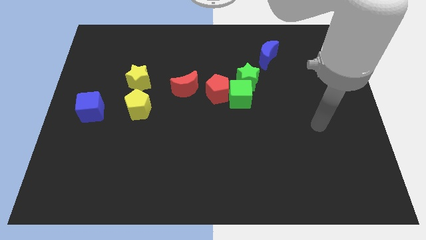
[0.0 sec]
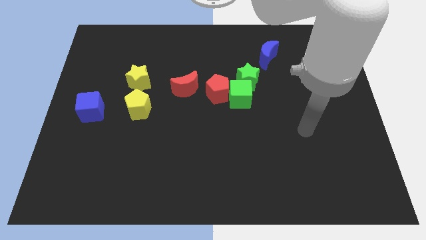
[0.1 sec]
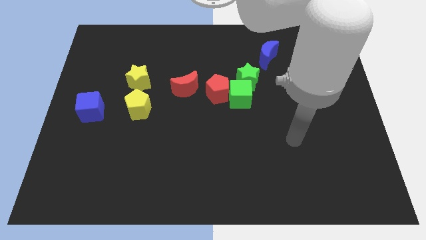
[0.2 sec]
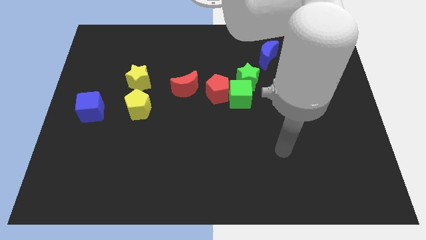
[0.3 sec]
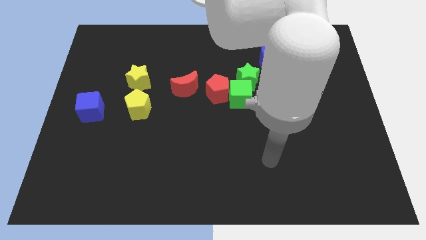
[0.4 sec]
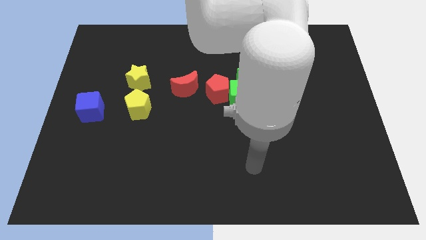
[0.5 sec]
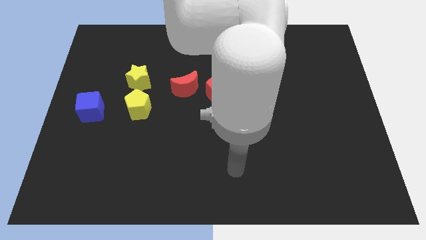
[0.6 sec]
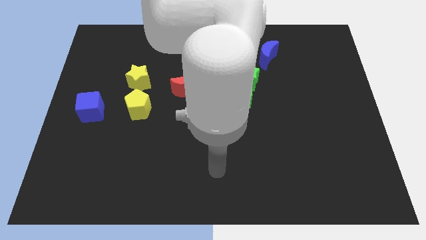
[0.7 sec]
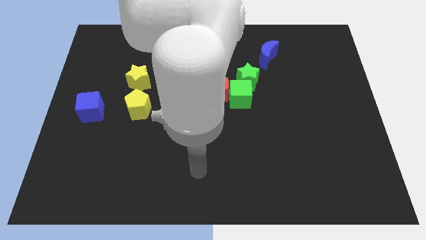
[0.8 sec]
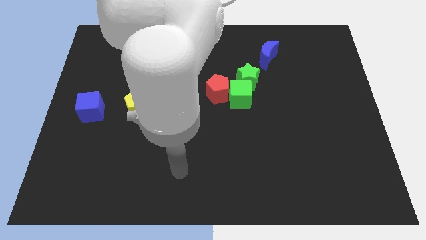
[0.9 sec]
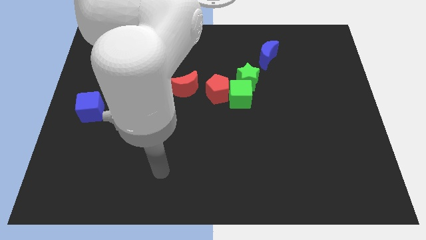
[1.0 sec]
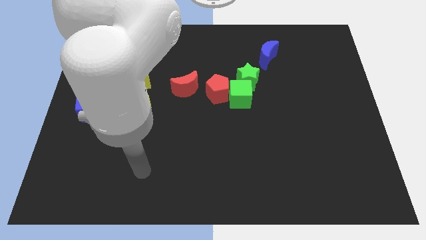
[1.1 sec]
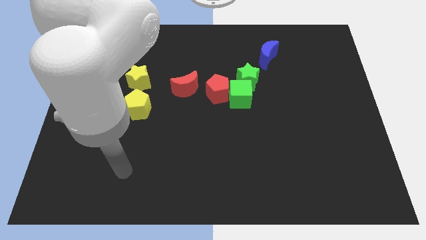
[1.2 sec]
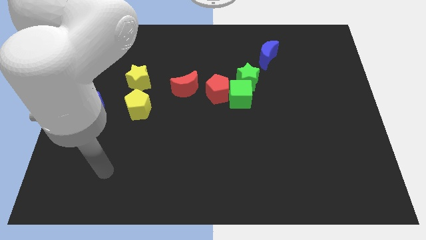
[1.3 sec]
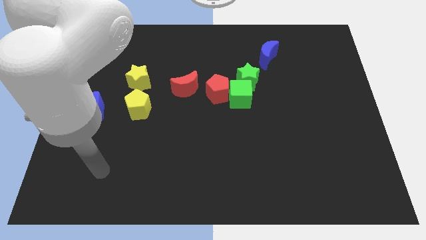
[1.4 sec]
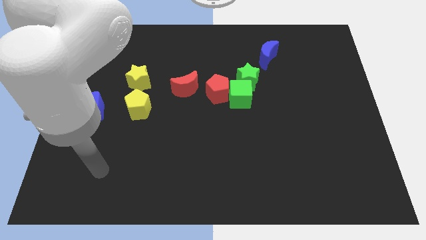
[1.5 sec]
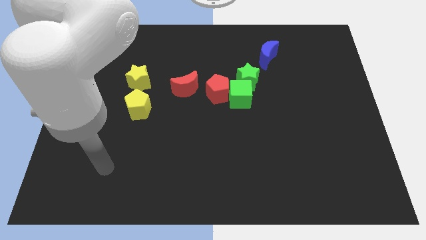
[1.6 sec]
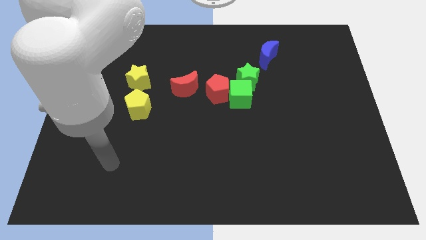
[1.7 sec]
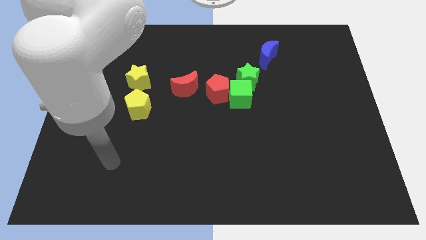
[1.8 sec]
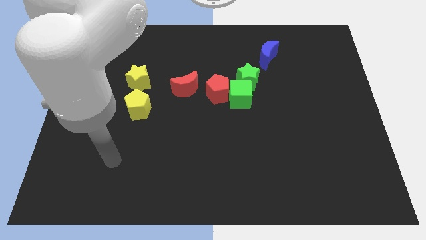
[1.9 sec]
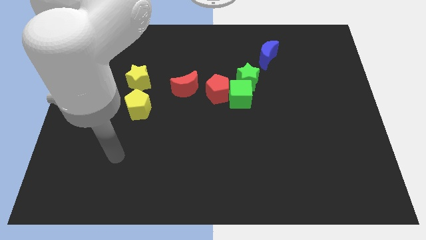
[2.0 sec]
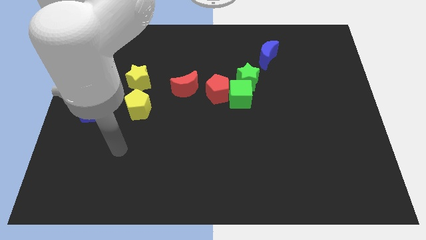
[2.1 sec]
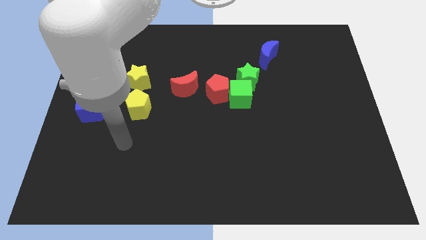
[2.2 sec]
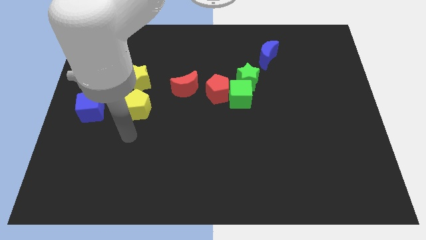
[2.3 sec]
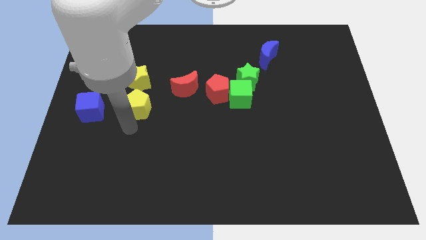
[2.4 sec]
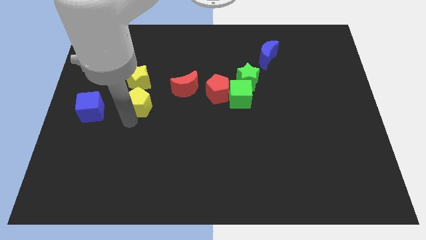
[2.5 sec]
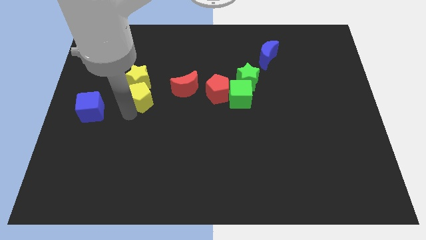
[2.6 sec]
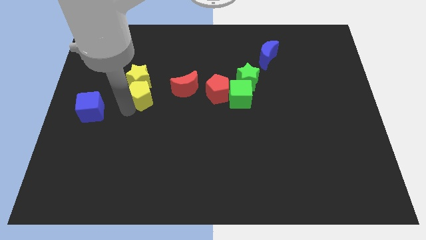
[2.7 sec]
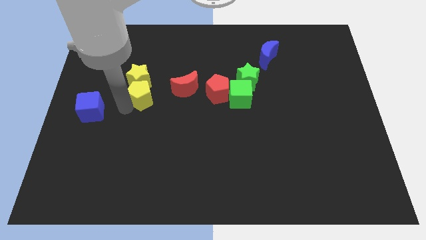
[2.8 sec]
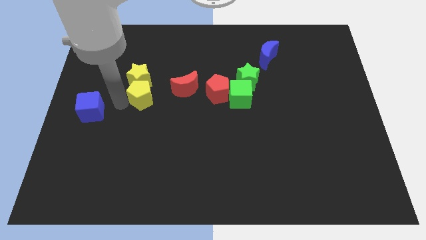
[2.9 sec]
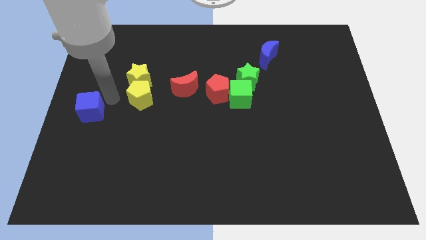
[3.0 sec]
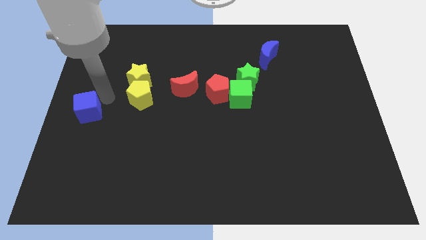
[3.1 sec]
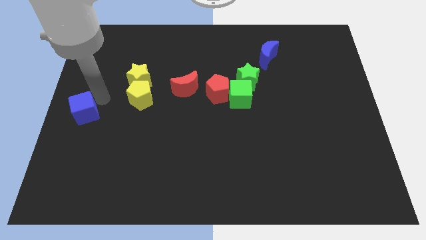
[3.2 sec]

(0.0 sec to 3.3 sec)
push the yellow pentagon into the yellow star

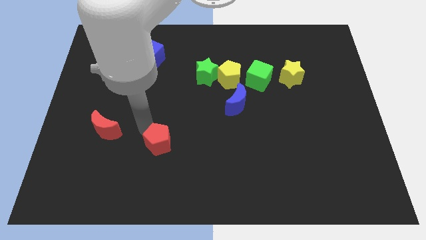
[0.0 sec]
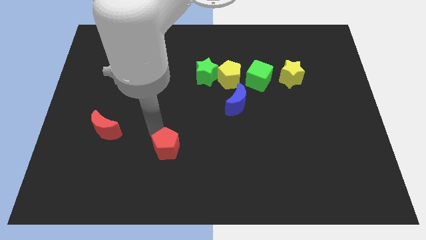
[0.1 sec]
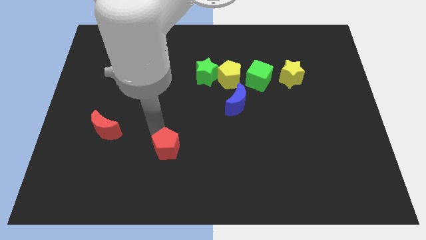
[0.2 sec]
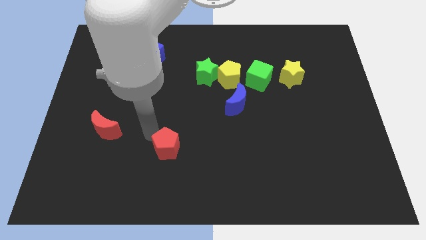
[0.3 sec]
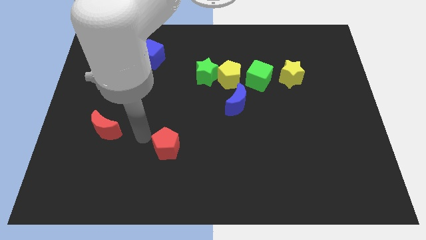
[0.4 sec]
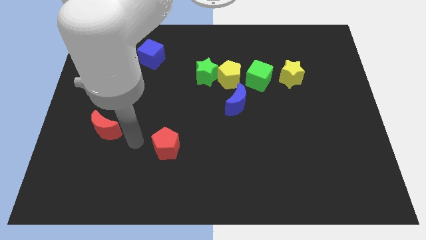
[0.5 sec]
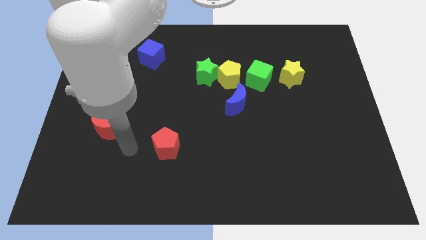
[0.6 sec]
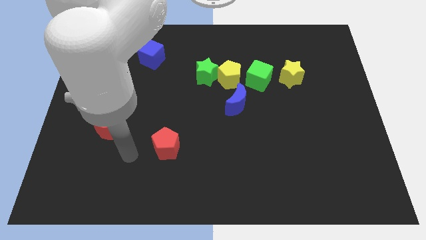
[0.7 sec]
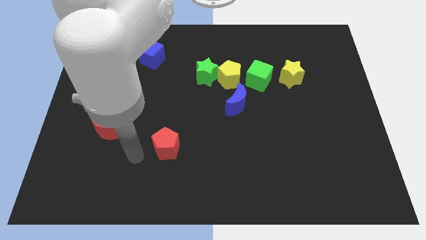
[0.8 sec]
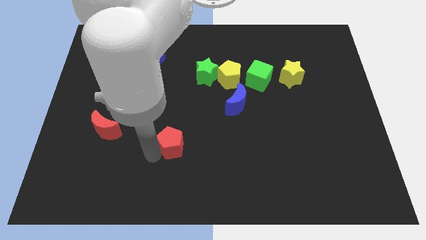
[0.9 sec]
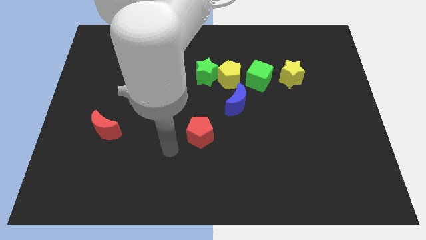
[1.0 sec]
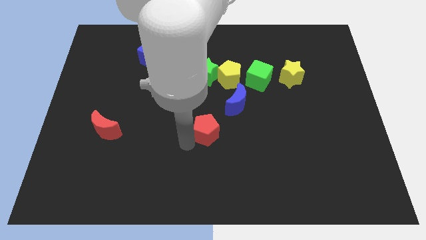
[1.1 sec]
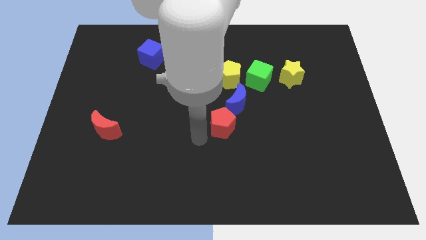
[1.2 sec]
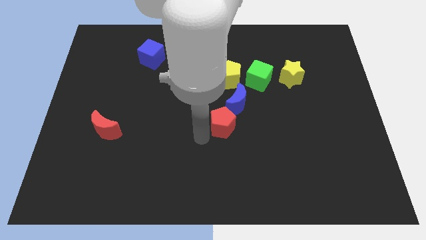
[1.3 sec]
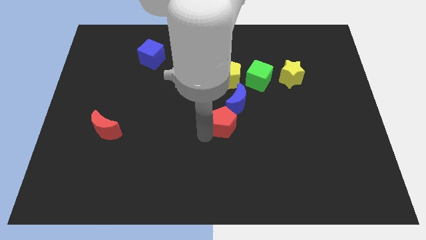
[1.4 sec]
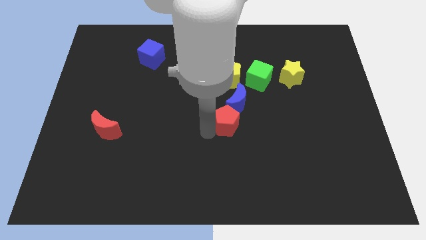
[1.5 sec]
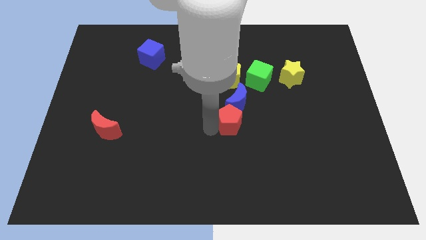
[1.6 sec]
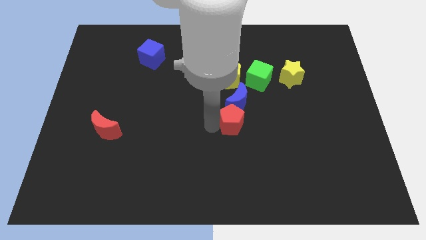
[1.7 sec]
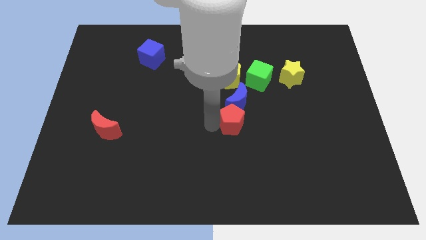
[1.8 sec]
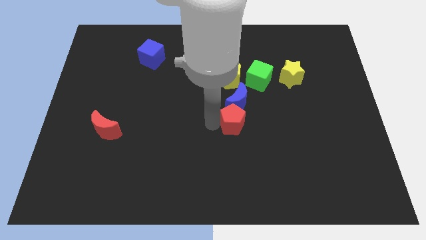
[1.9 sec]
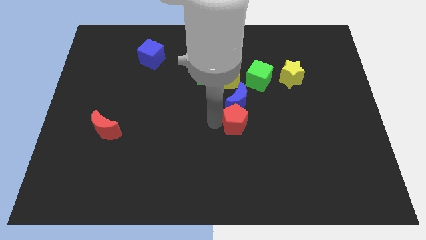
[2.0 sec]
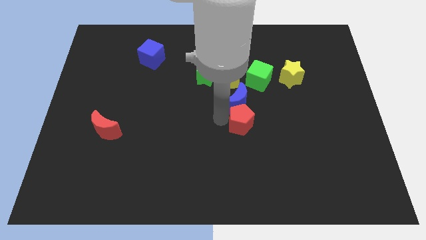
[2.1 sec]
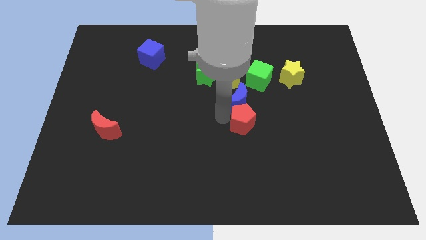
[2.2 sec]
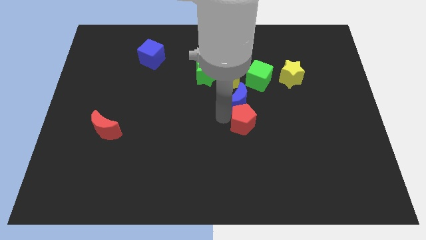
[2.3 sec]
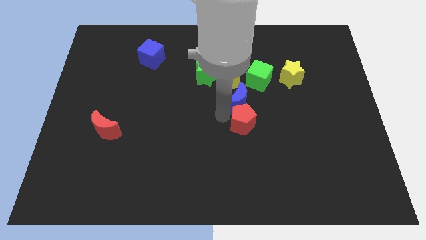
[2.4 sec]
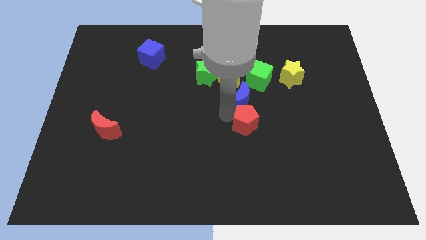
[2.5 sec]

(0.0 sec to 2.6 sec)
push the red pentagon into the blue crescent

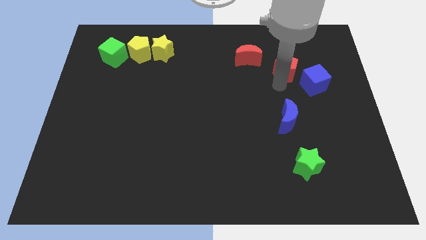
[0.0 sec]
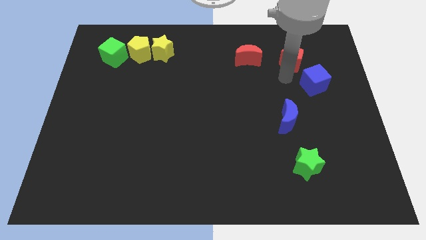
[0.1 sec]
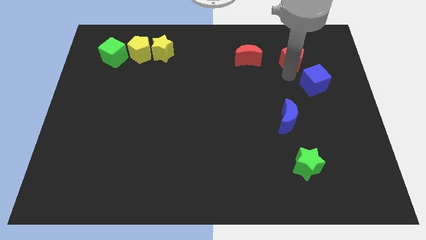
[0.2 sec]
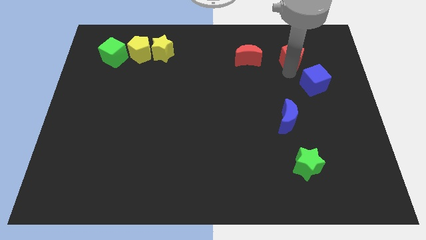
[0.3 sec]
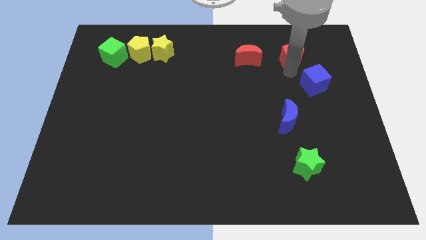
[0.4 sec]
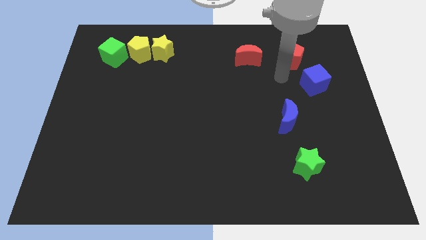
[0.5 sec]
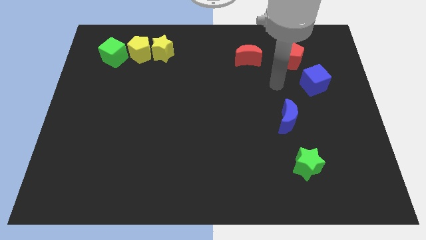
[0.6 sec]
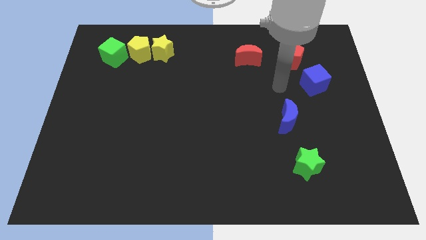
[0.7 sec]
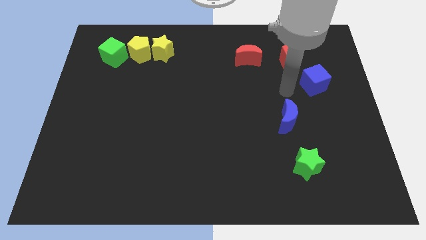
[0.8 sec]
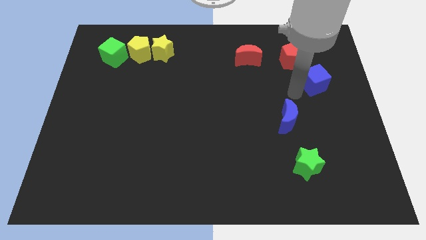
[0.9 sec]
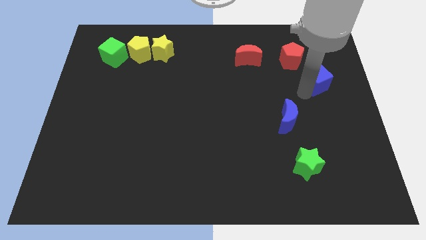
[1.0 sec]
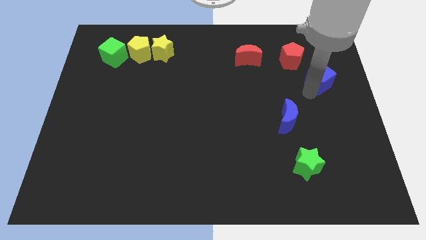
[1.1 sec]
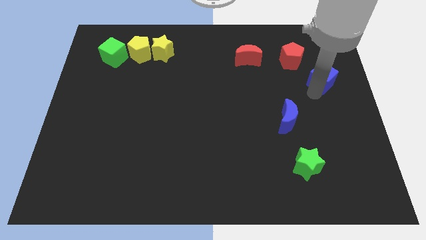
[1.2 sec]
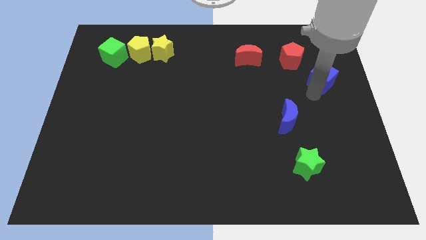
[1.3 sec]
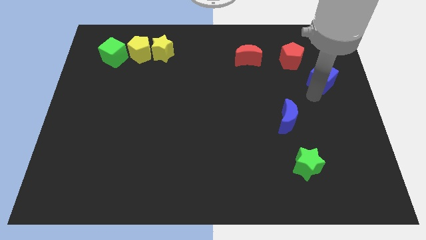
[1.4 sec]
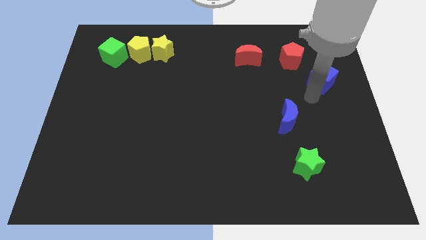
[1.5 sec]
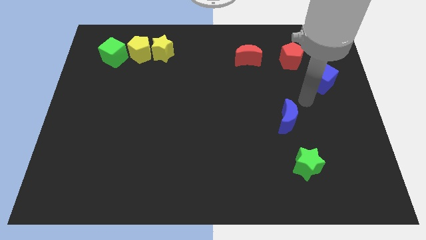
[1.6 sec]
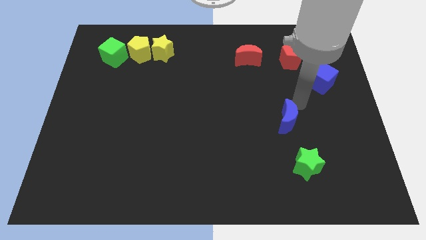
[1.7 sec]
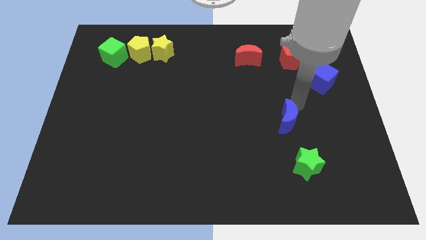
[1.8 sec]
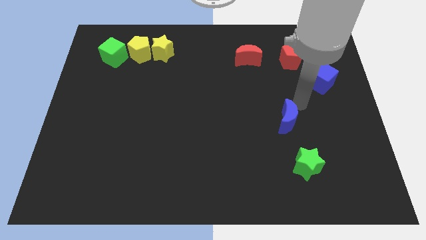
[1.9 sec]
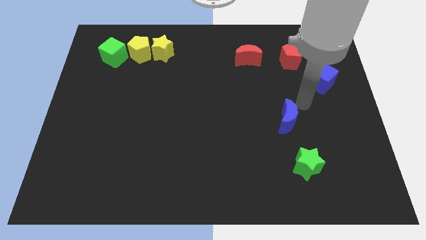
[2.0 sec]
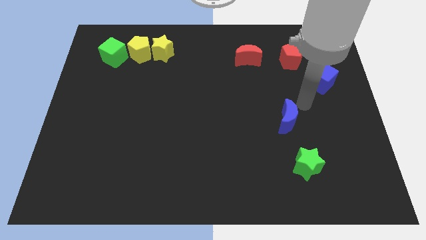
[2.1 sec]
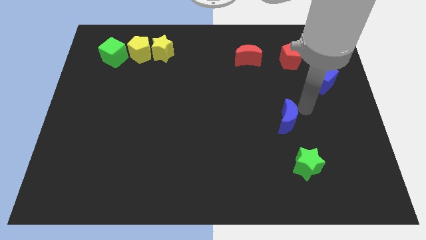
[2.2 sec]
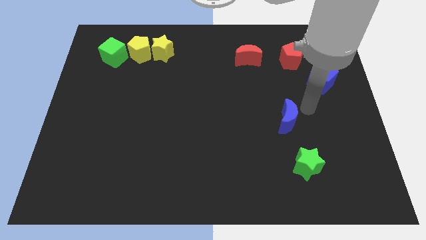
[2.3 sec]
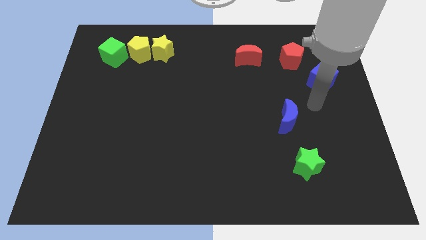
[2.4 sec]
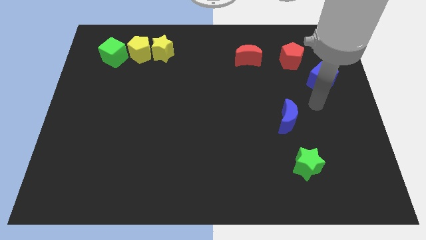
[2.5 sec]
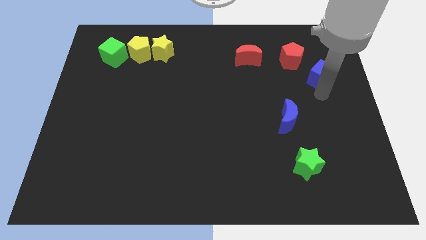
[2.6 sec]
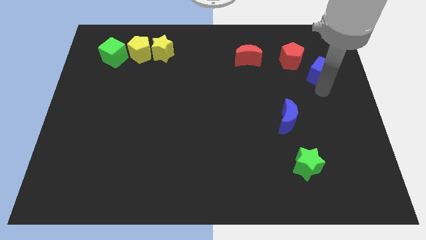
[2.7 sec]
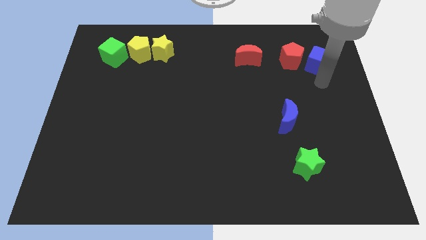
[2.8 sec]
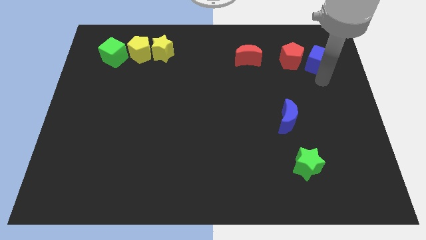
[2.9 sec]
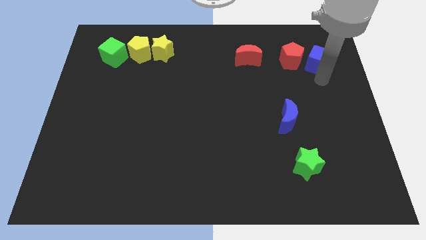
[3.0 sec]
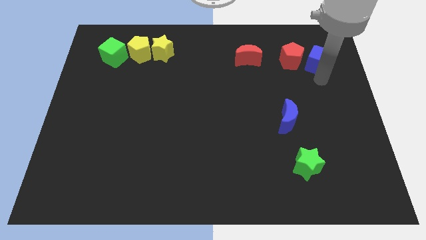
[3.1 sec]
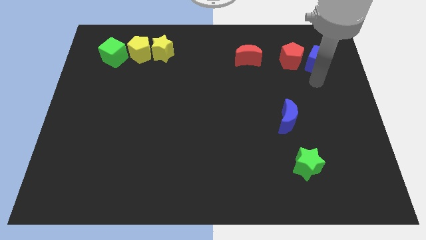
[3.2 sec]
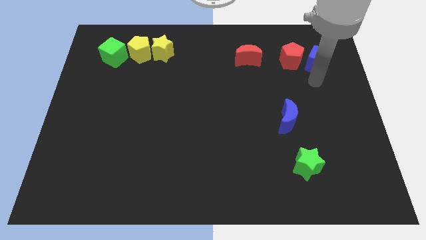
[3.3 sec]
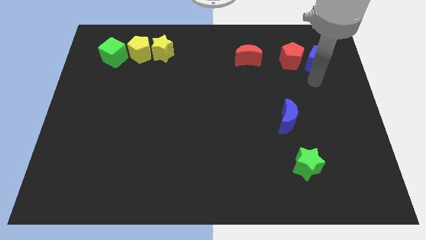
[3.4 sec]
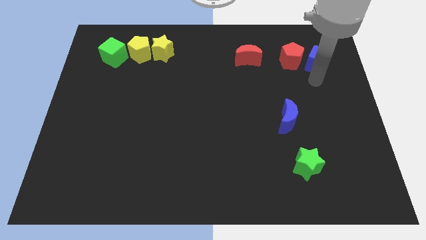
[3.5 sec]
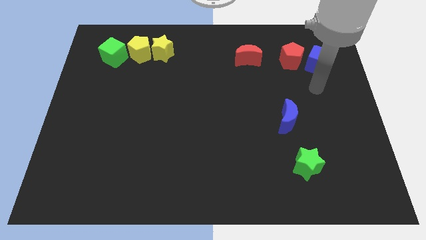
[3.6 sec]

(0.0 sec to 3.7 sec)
place the red pentagon and blue cube to the right side of the red crescent
